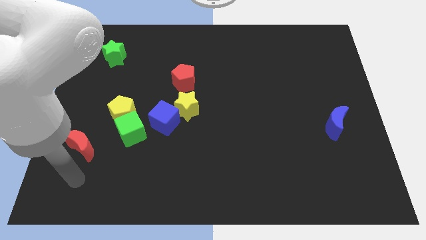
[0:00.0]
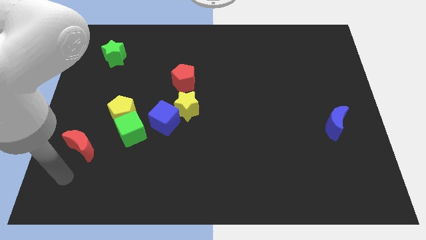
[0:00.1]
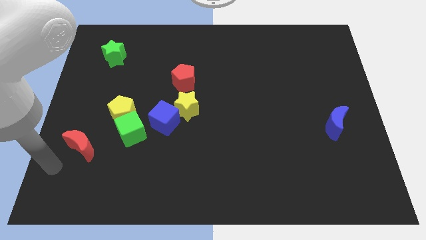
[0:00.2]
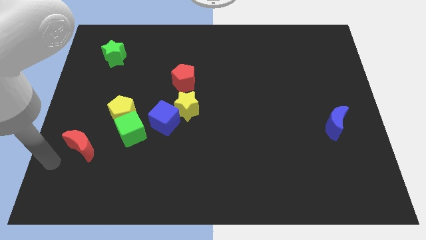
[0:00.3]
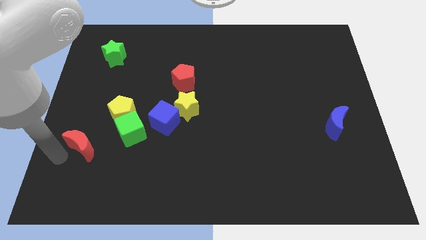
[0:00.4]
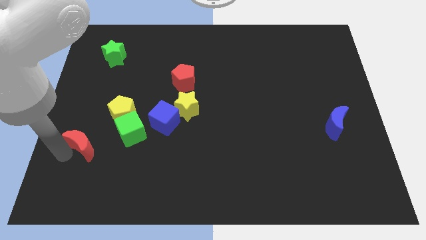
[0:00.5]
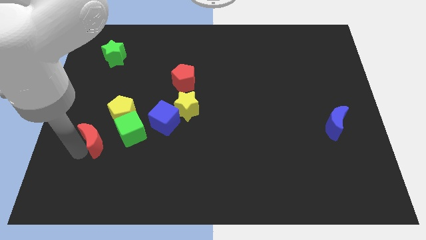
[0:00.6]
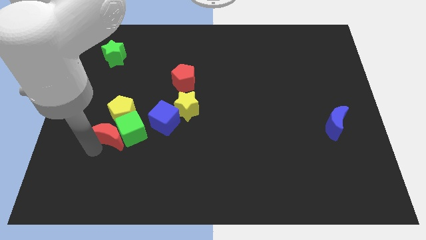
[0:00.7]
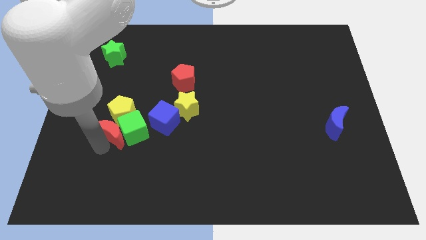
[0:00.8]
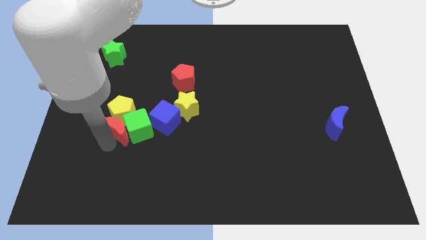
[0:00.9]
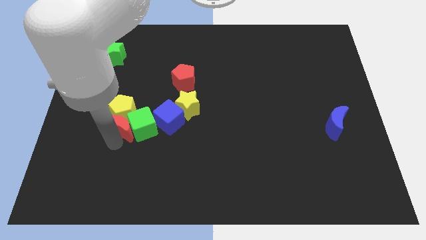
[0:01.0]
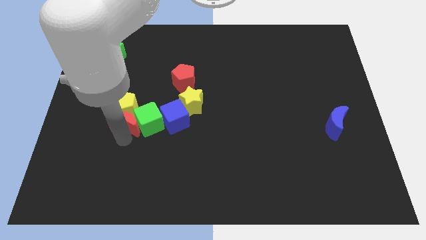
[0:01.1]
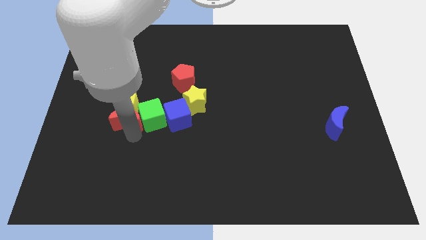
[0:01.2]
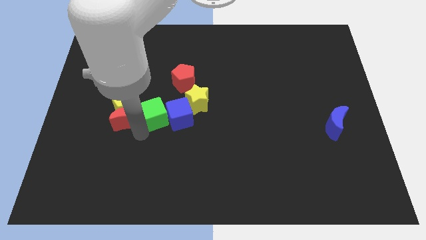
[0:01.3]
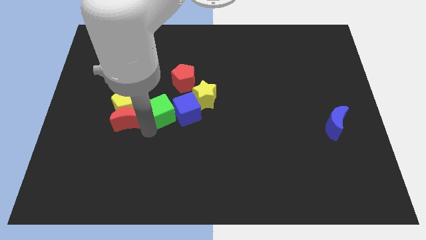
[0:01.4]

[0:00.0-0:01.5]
push the red crescent into the green cube

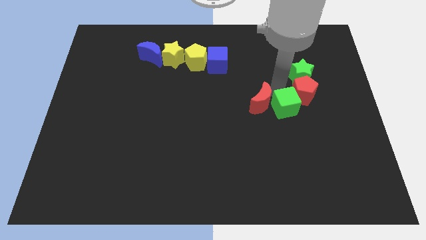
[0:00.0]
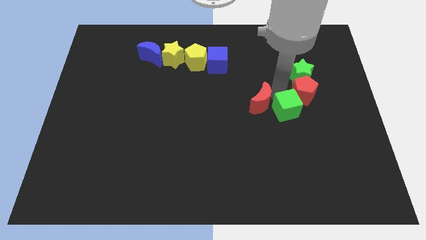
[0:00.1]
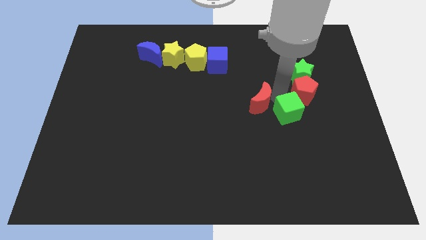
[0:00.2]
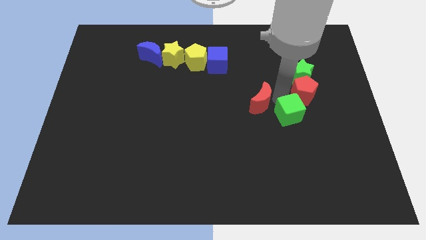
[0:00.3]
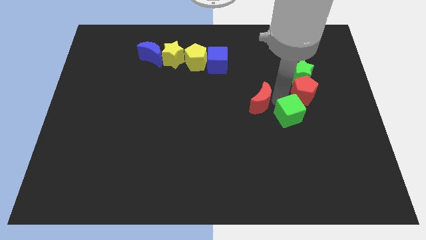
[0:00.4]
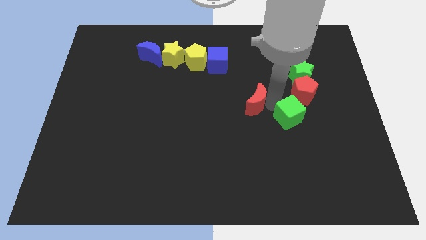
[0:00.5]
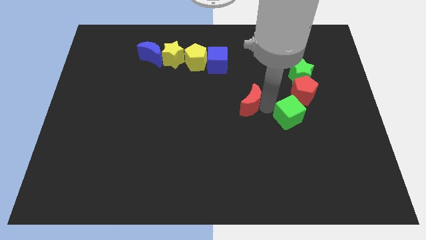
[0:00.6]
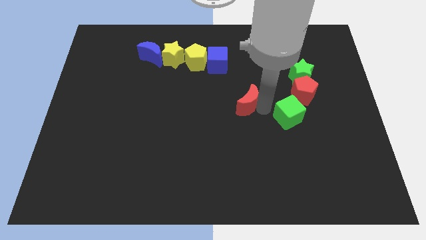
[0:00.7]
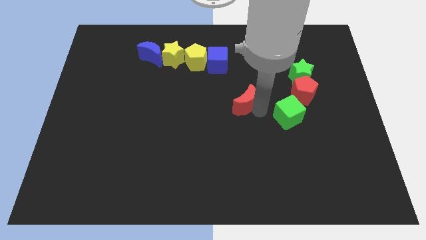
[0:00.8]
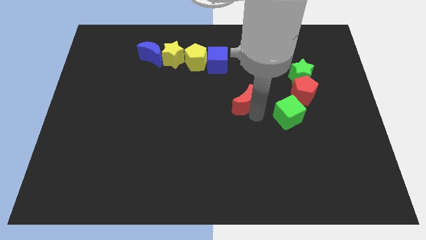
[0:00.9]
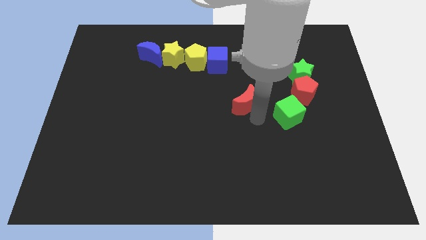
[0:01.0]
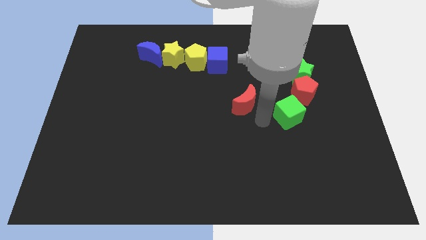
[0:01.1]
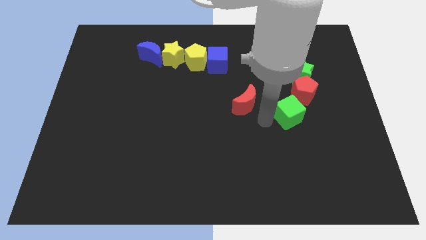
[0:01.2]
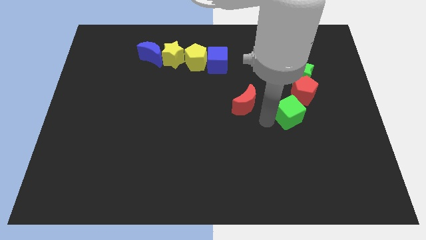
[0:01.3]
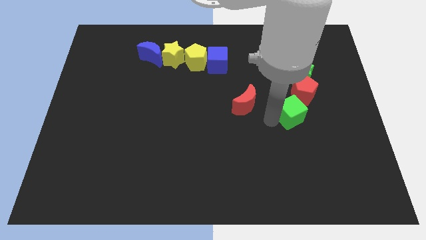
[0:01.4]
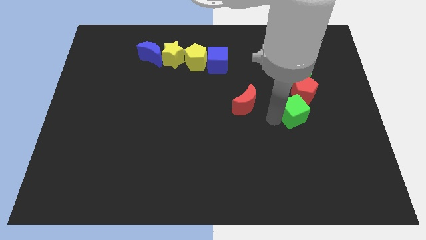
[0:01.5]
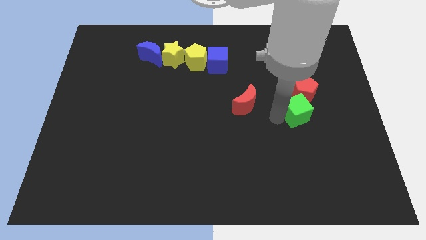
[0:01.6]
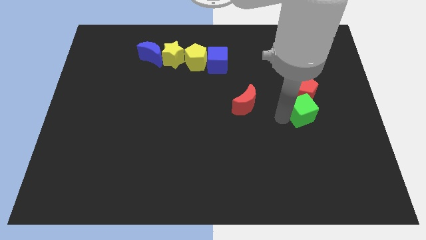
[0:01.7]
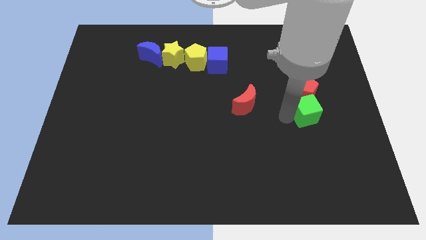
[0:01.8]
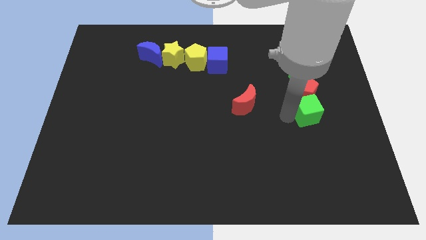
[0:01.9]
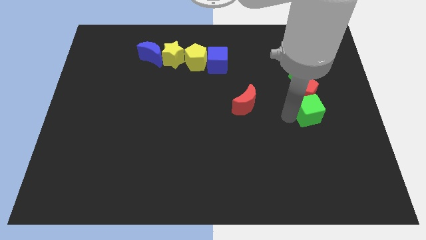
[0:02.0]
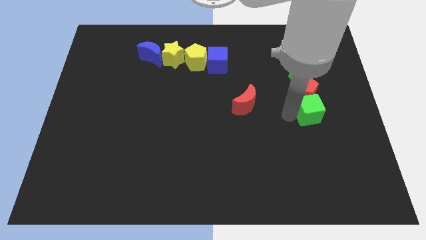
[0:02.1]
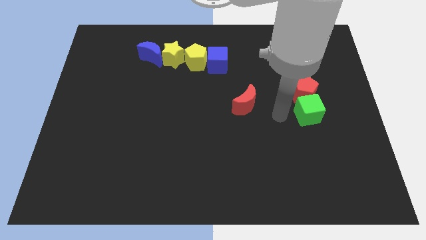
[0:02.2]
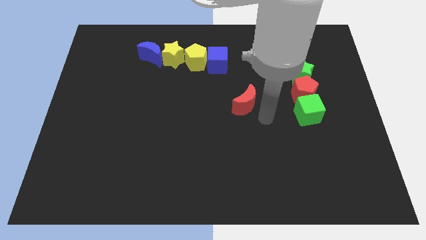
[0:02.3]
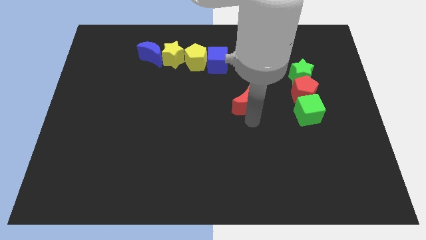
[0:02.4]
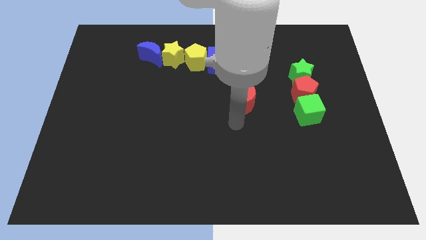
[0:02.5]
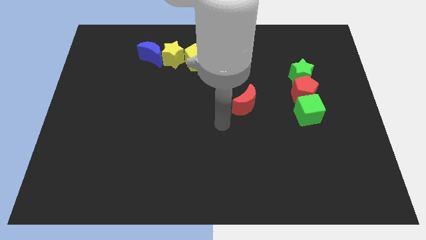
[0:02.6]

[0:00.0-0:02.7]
move the green cube to the bottom of the red pentagon

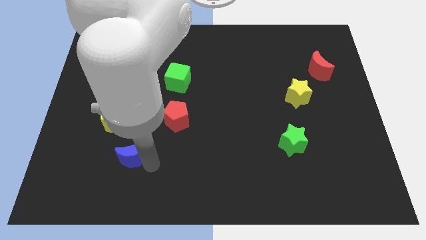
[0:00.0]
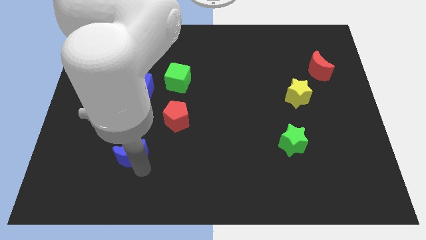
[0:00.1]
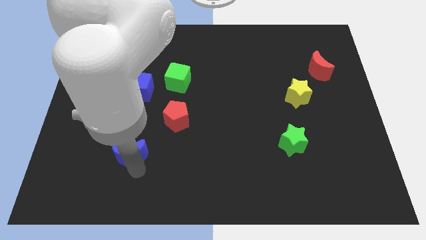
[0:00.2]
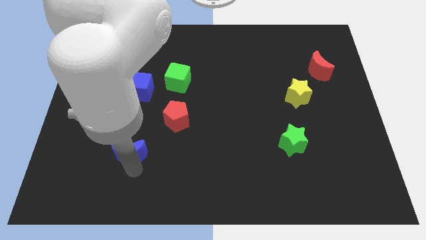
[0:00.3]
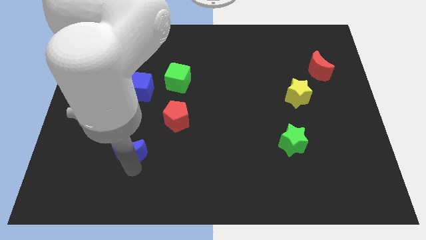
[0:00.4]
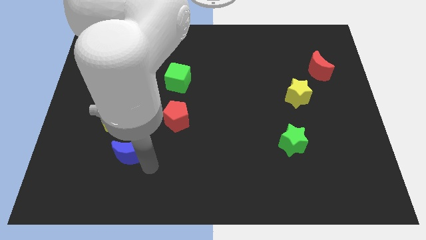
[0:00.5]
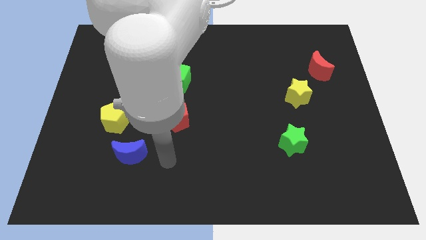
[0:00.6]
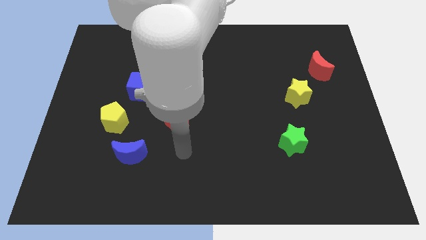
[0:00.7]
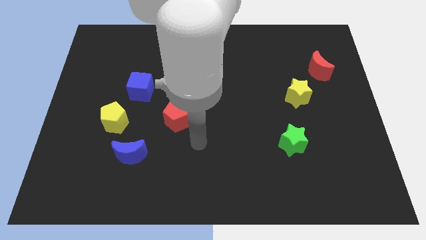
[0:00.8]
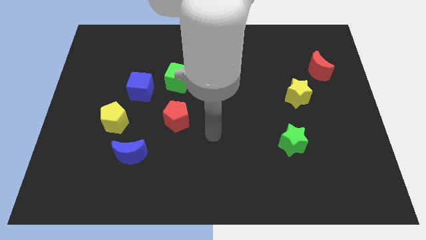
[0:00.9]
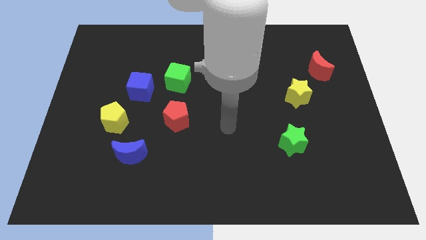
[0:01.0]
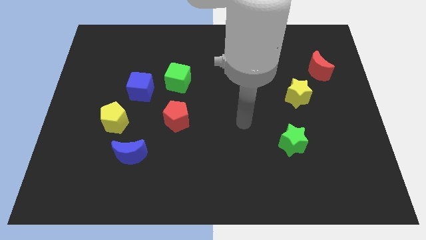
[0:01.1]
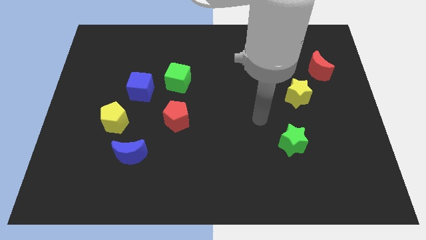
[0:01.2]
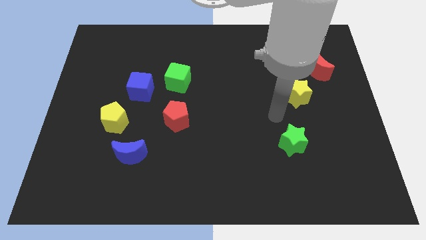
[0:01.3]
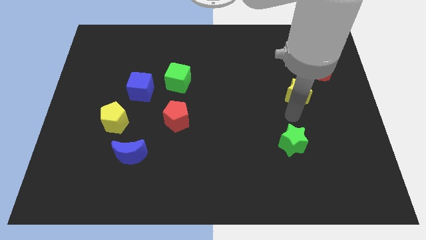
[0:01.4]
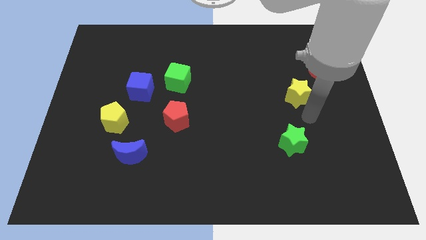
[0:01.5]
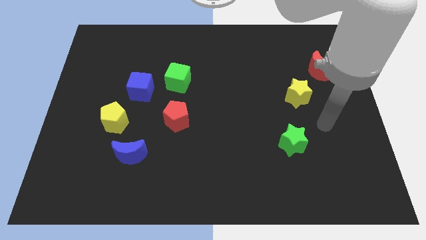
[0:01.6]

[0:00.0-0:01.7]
drag the blue crescent towards the bottom of the yellow pentagon

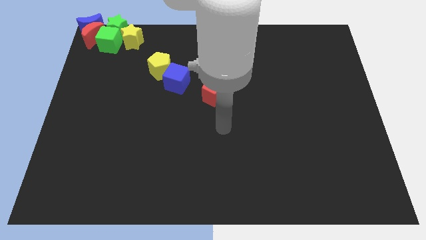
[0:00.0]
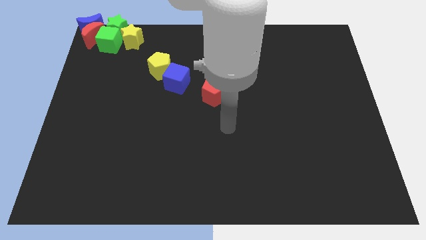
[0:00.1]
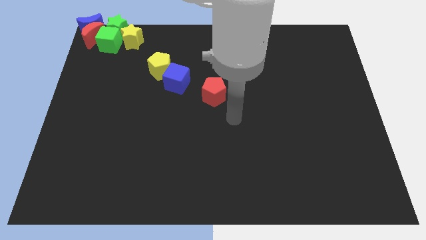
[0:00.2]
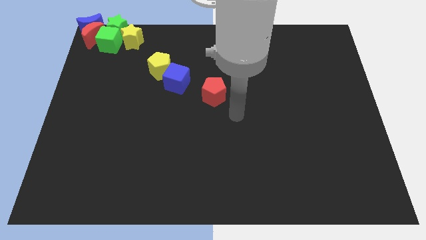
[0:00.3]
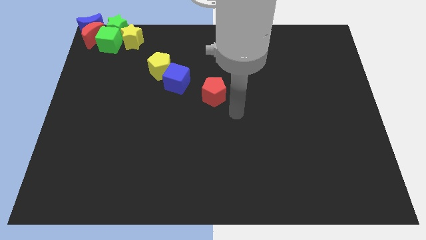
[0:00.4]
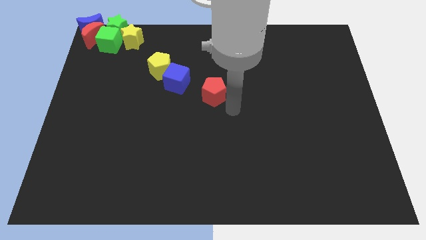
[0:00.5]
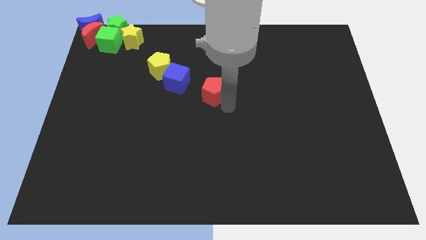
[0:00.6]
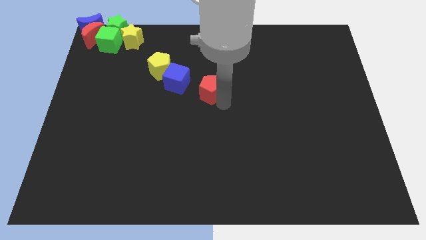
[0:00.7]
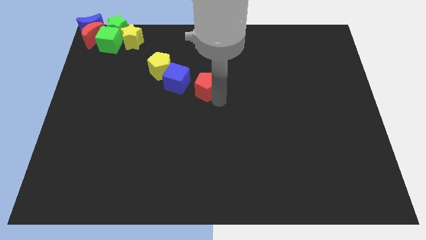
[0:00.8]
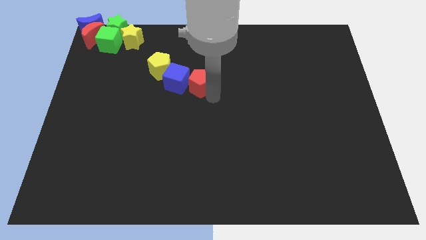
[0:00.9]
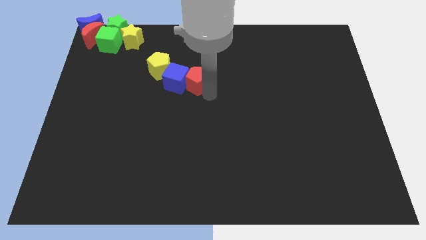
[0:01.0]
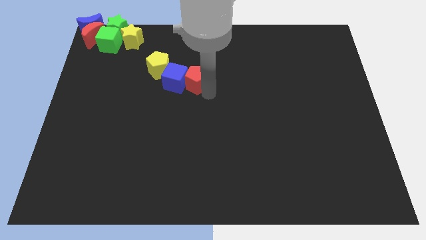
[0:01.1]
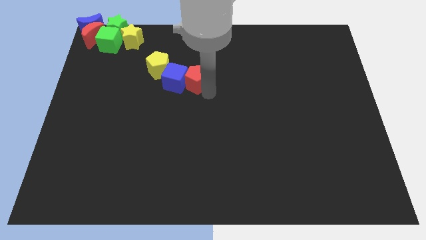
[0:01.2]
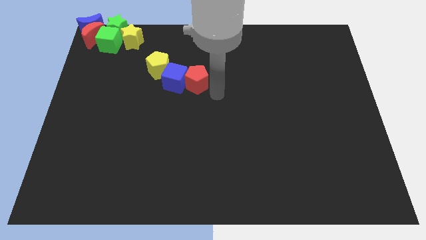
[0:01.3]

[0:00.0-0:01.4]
push the red pentagon into the blue cube

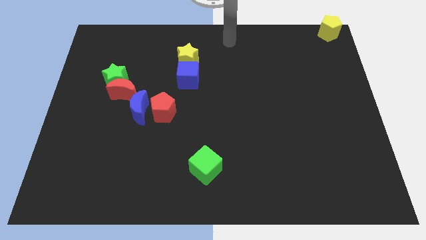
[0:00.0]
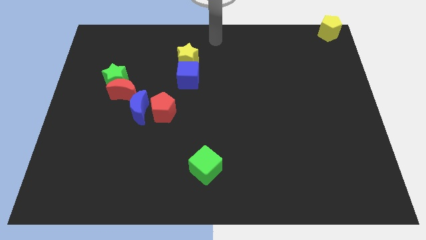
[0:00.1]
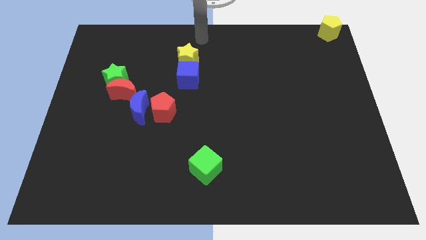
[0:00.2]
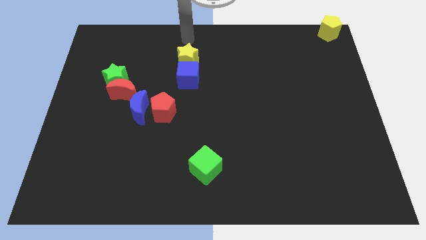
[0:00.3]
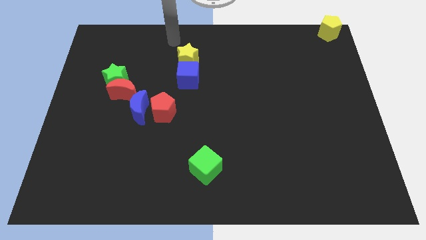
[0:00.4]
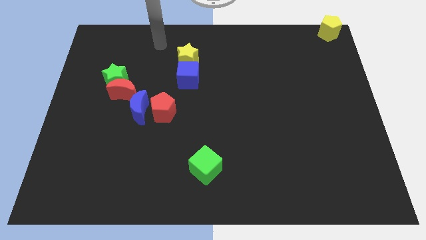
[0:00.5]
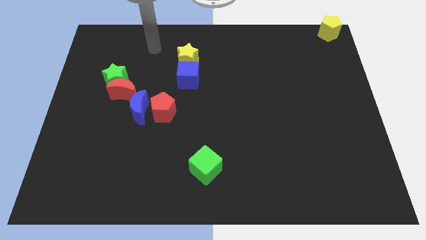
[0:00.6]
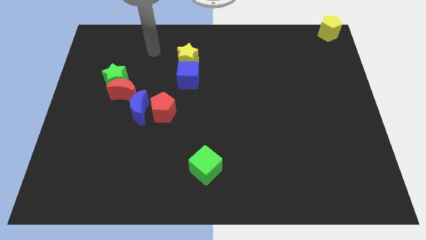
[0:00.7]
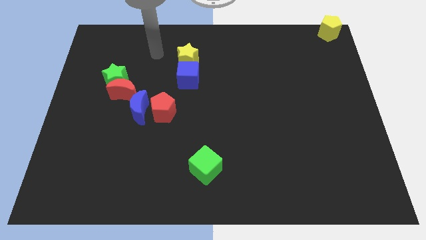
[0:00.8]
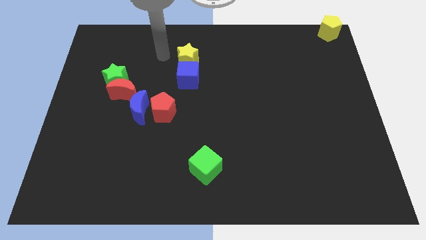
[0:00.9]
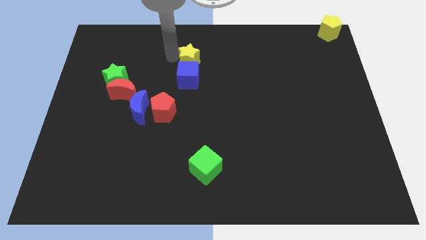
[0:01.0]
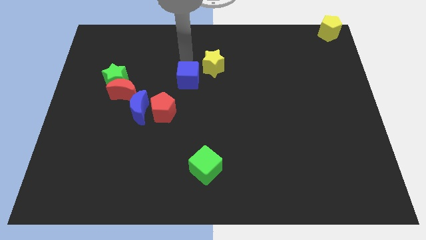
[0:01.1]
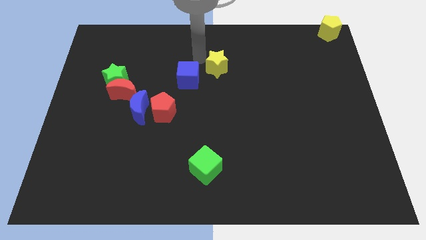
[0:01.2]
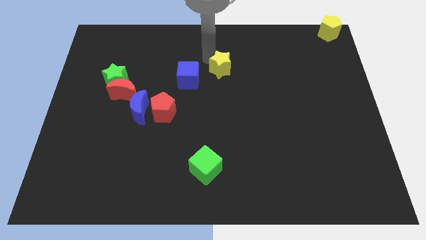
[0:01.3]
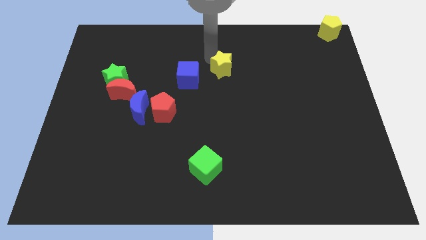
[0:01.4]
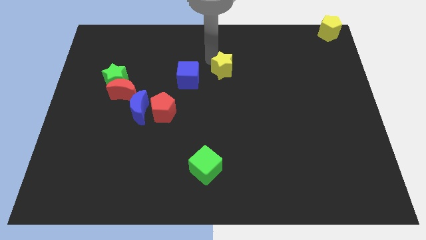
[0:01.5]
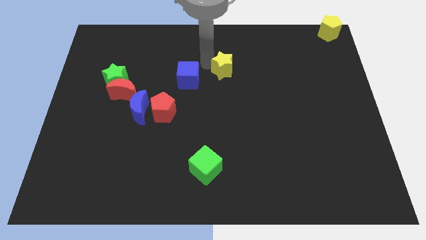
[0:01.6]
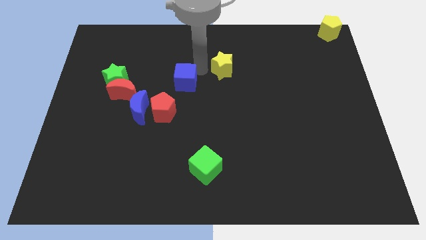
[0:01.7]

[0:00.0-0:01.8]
separate the yellow star from the blue cube
